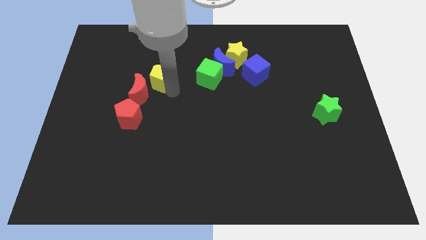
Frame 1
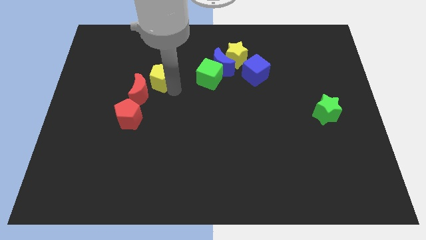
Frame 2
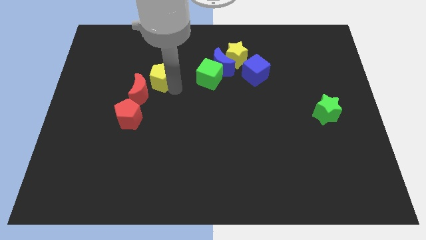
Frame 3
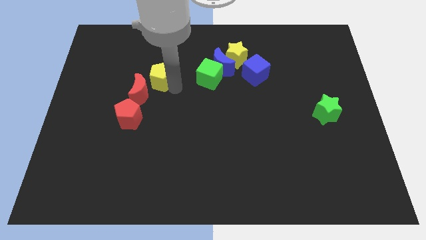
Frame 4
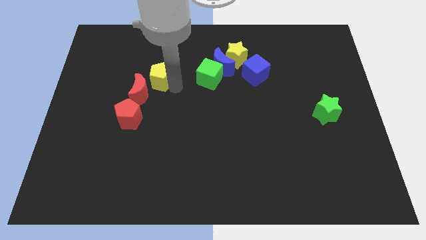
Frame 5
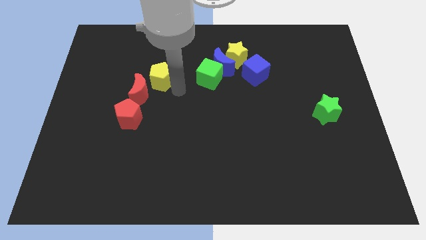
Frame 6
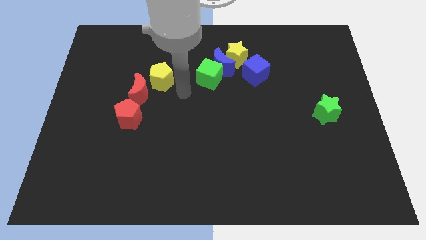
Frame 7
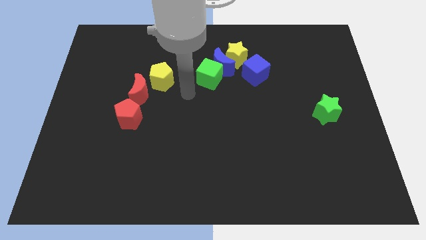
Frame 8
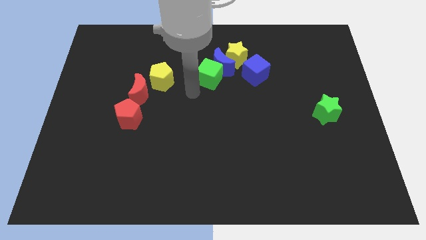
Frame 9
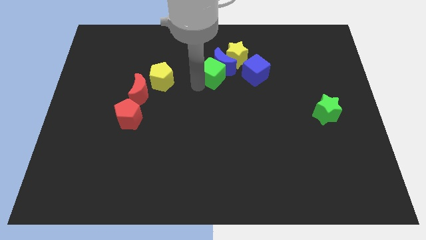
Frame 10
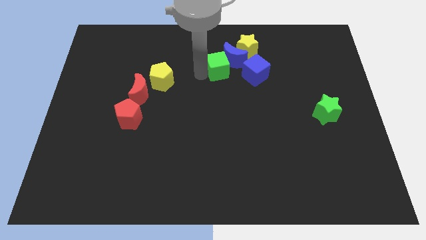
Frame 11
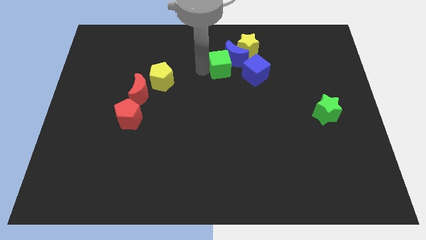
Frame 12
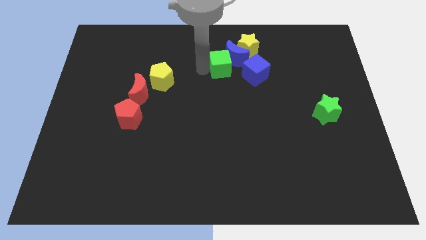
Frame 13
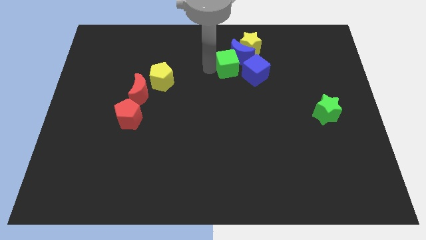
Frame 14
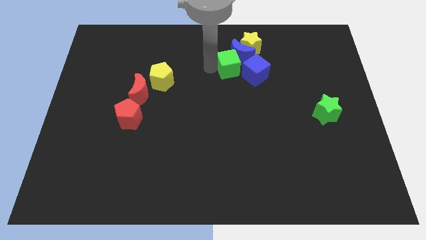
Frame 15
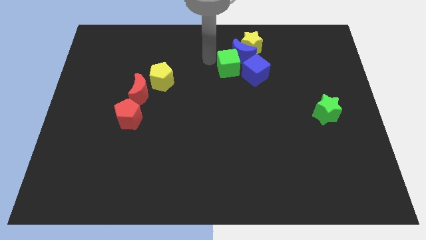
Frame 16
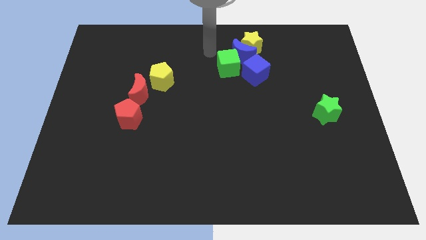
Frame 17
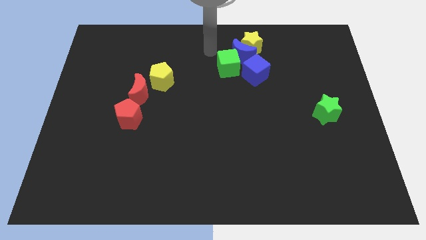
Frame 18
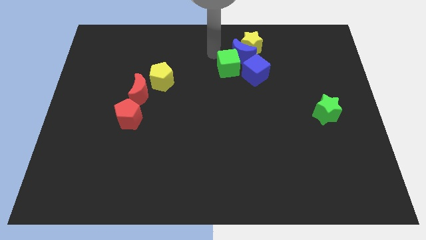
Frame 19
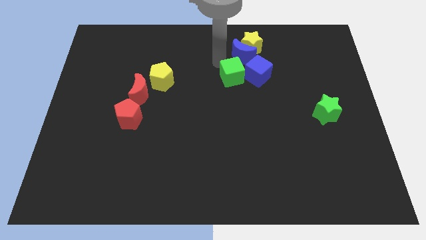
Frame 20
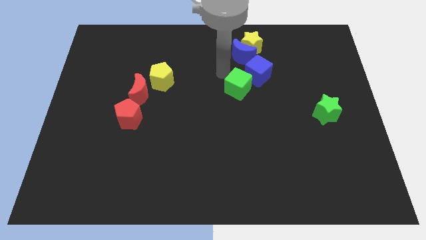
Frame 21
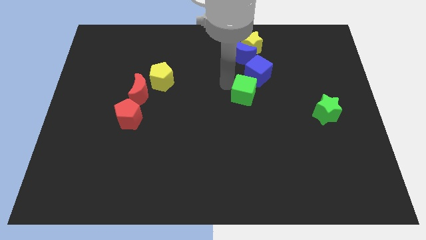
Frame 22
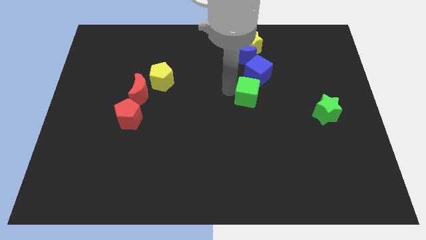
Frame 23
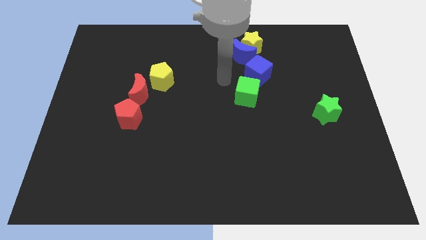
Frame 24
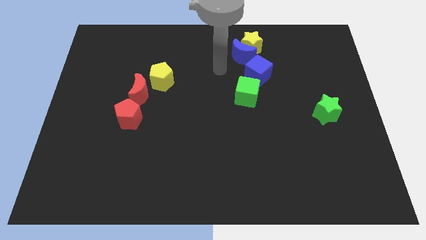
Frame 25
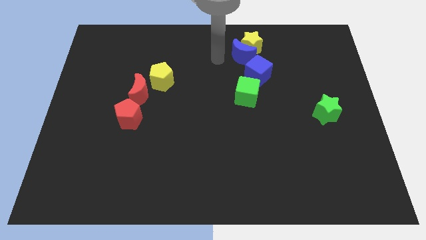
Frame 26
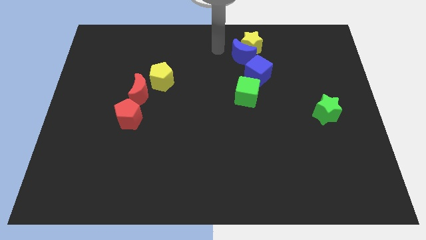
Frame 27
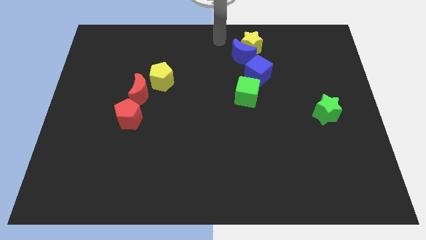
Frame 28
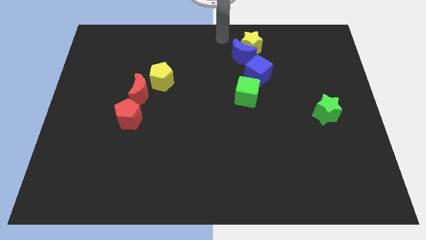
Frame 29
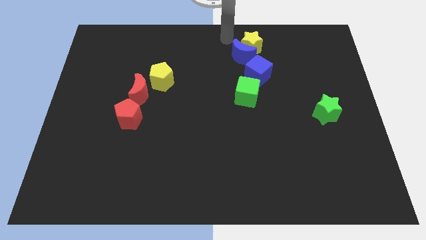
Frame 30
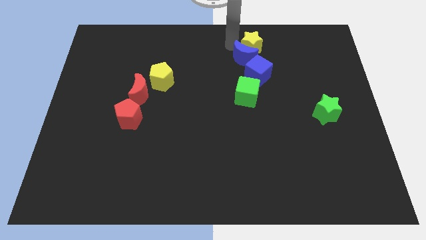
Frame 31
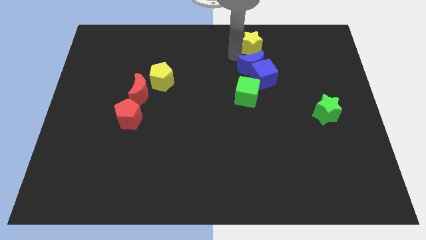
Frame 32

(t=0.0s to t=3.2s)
place green cube to the bottom of the blue cube

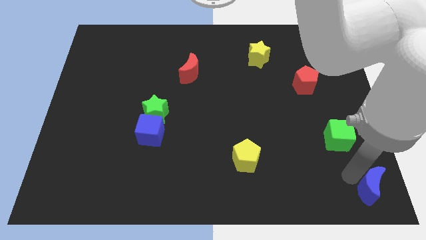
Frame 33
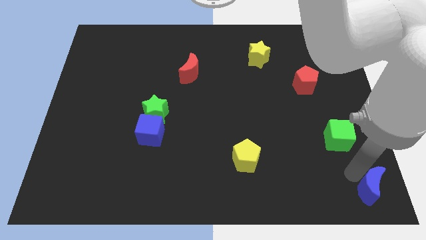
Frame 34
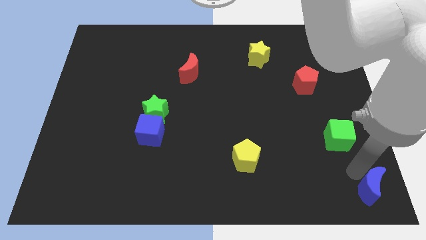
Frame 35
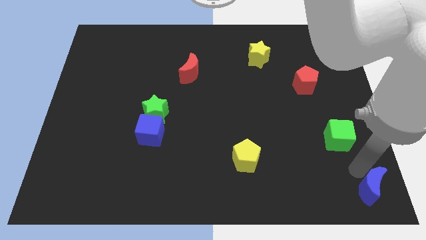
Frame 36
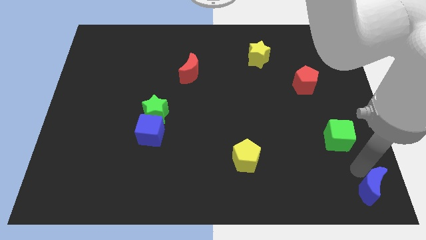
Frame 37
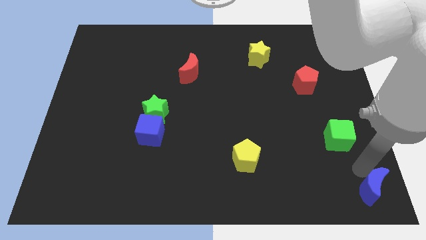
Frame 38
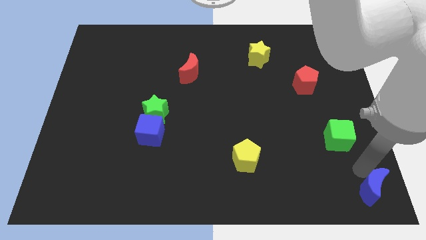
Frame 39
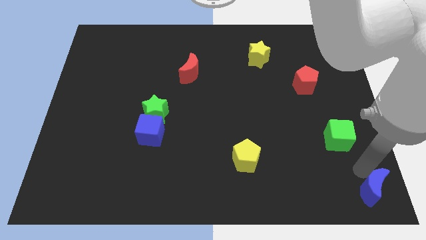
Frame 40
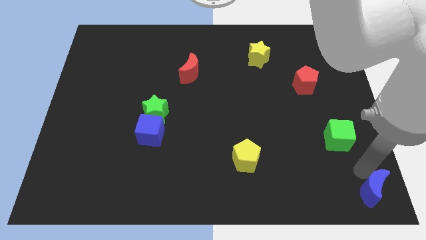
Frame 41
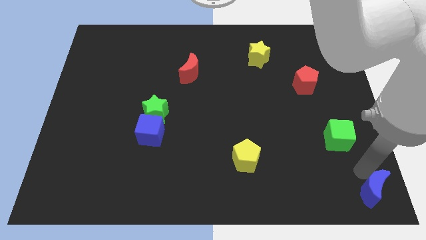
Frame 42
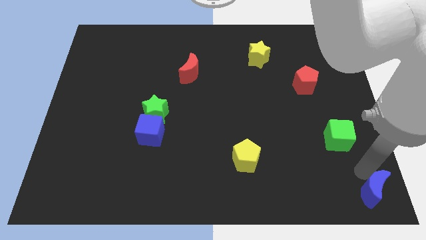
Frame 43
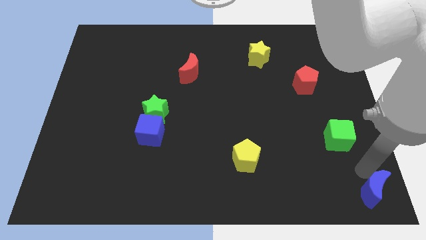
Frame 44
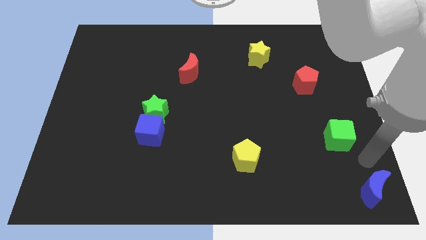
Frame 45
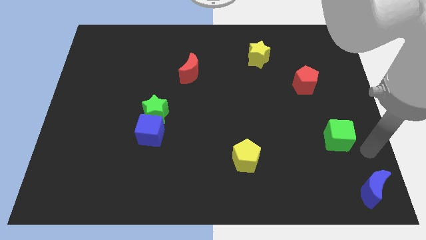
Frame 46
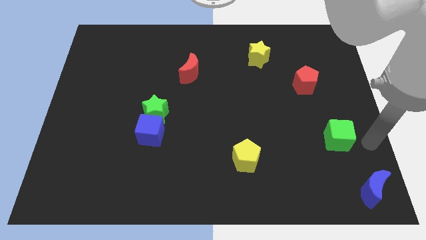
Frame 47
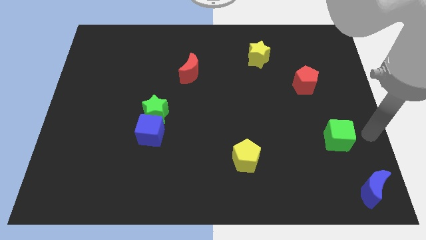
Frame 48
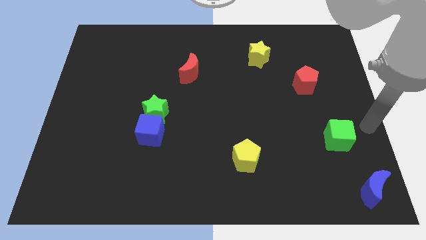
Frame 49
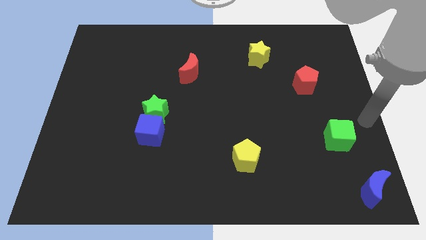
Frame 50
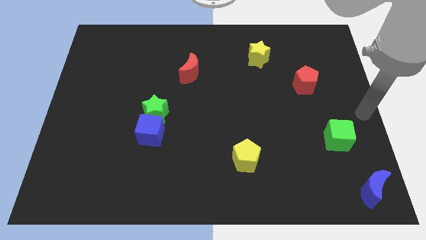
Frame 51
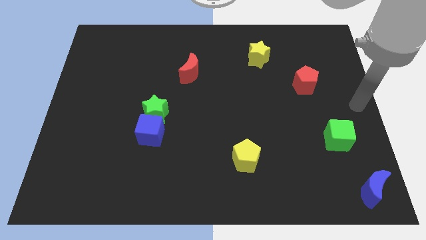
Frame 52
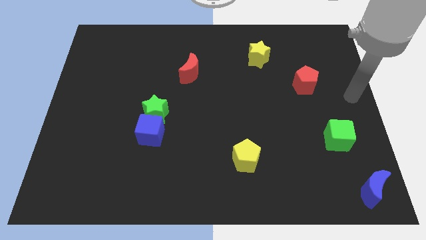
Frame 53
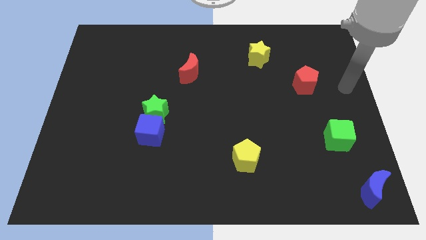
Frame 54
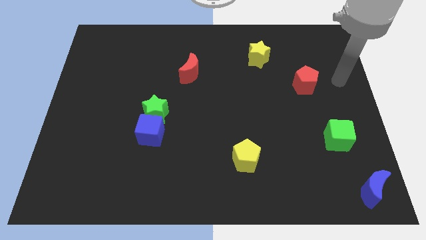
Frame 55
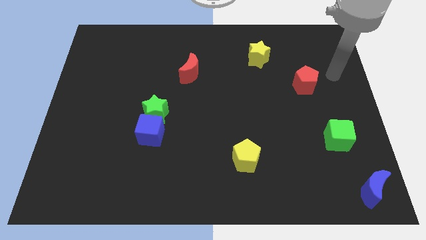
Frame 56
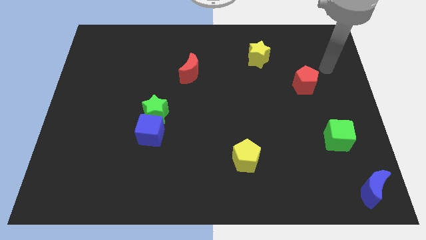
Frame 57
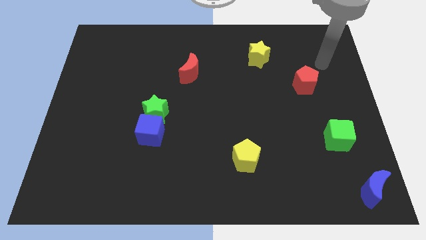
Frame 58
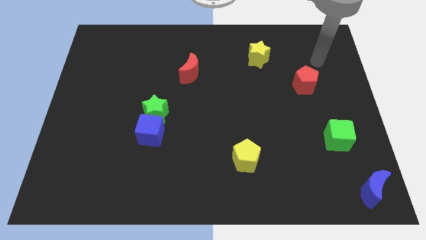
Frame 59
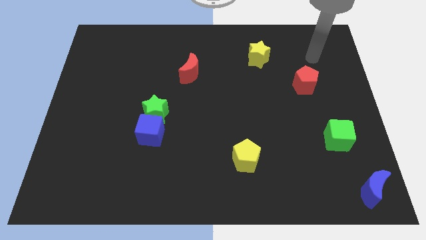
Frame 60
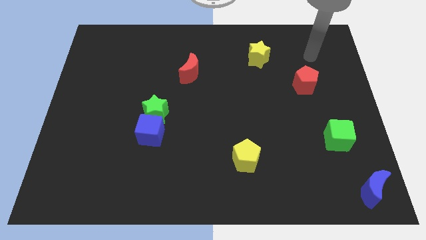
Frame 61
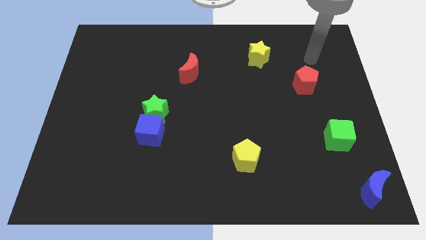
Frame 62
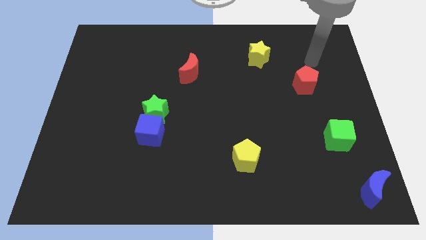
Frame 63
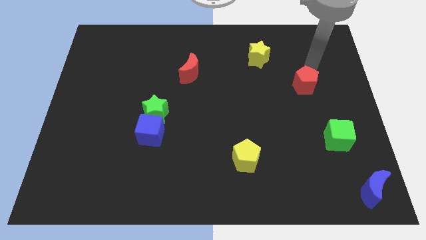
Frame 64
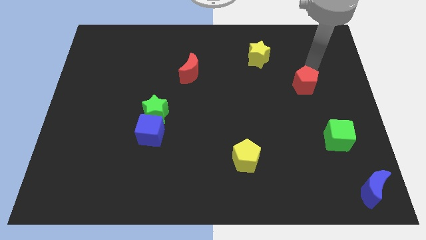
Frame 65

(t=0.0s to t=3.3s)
move your arm to the top of red pentagon

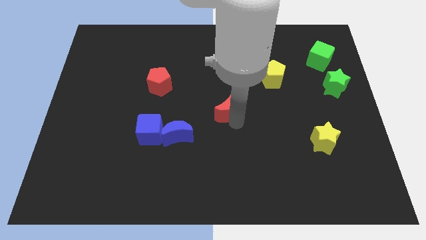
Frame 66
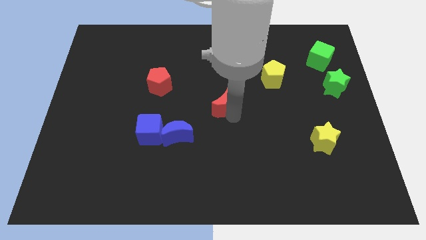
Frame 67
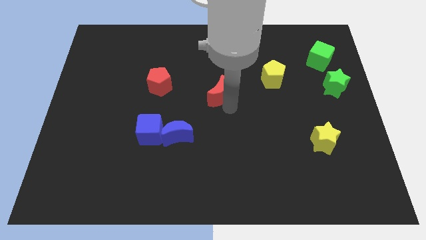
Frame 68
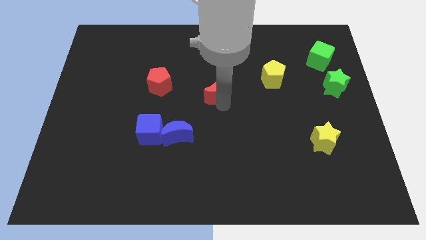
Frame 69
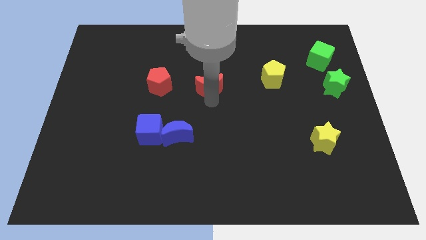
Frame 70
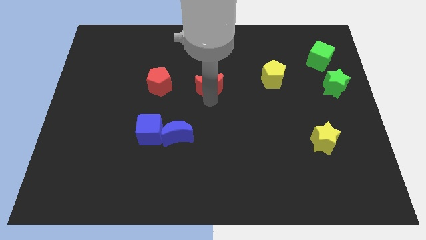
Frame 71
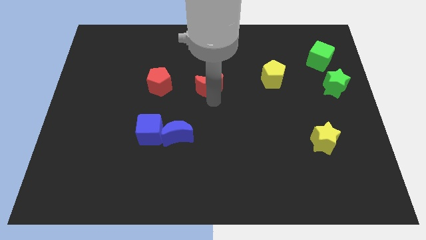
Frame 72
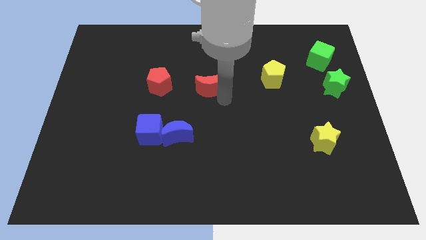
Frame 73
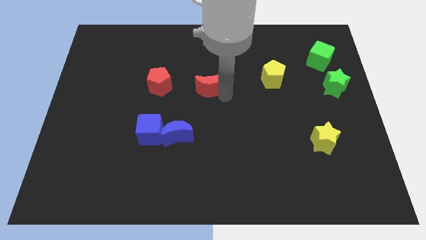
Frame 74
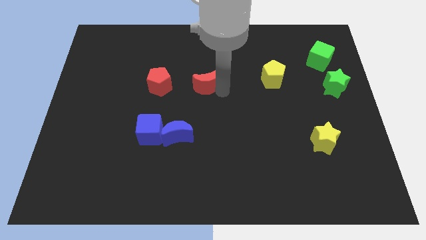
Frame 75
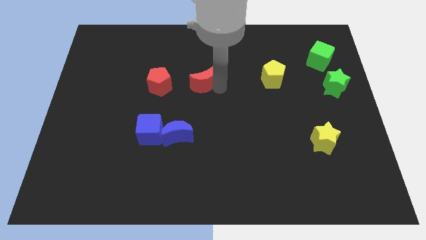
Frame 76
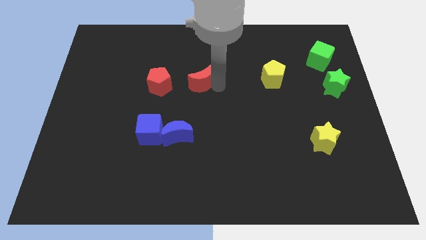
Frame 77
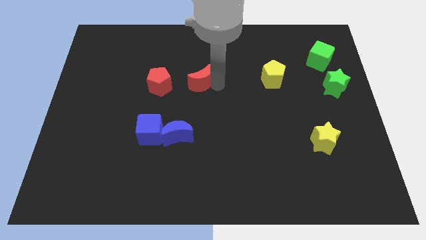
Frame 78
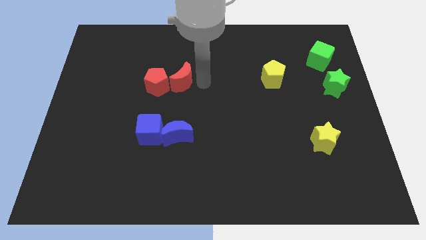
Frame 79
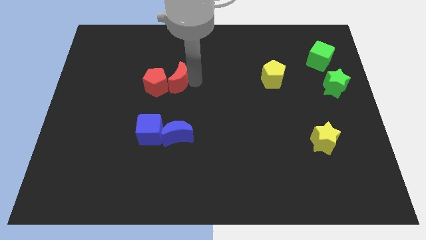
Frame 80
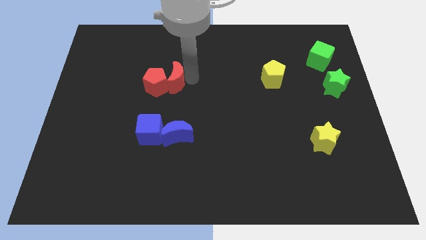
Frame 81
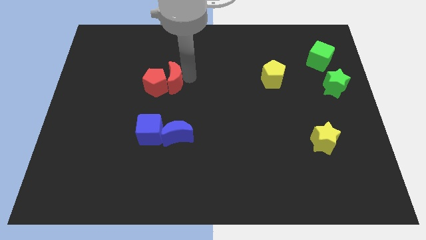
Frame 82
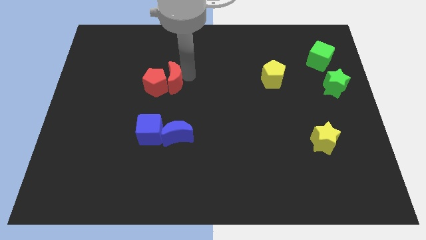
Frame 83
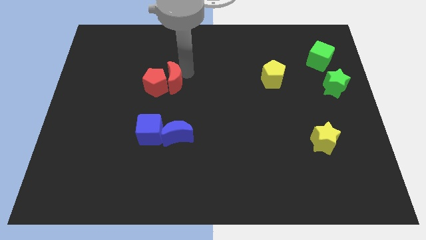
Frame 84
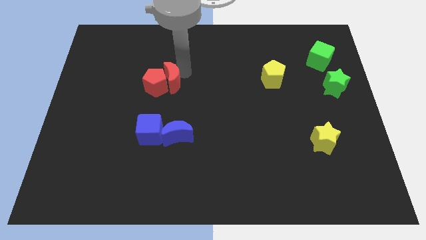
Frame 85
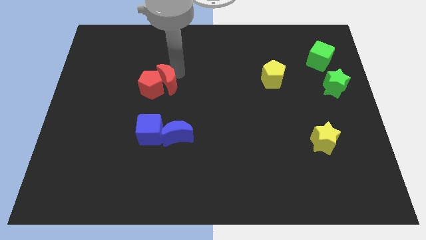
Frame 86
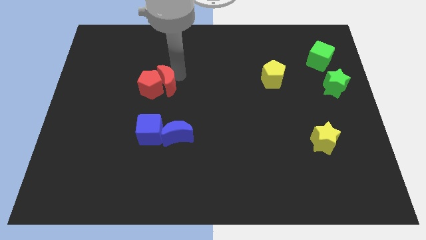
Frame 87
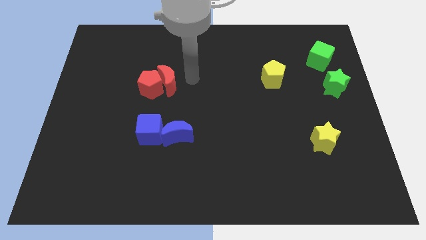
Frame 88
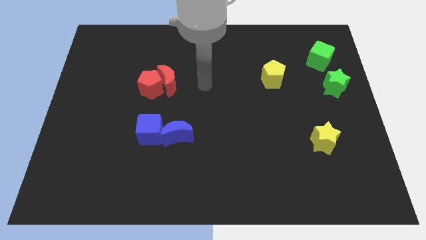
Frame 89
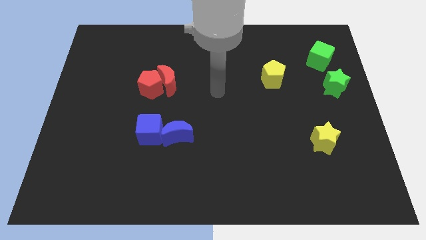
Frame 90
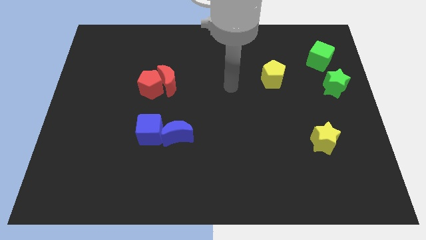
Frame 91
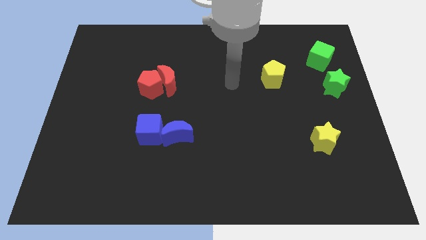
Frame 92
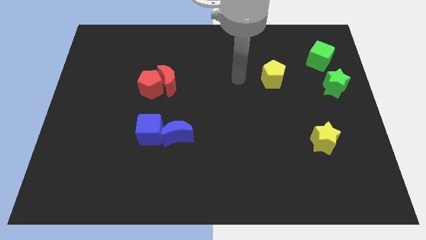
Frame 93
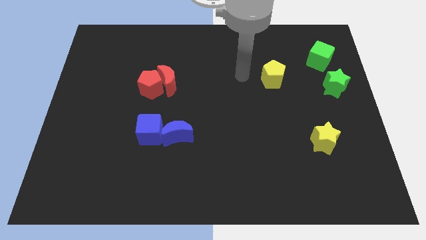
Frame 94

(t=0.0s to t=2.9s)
move the red moon into the red pentagon
